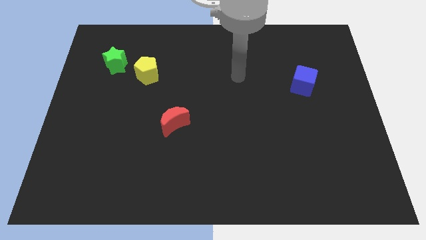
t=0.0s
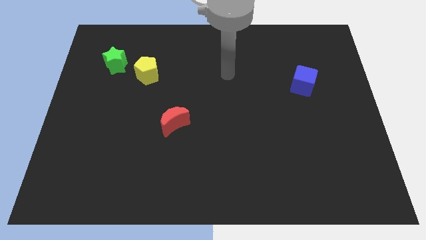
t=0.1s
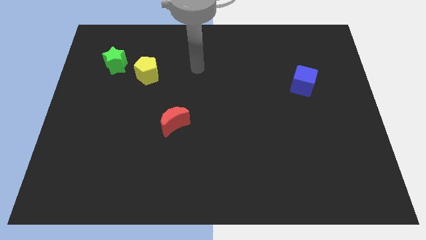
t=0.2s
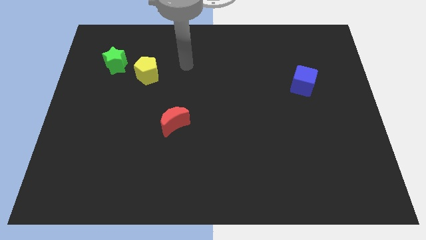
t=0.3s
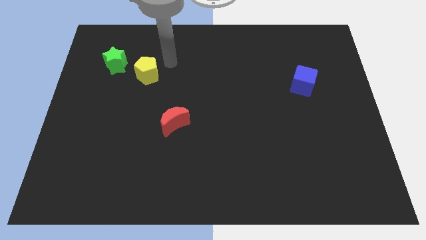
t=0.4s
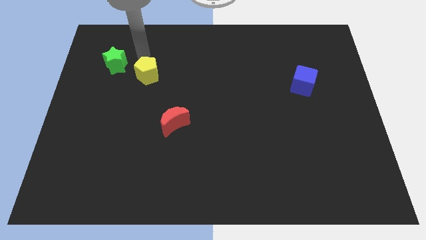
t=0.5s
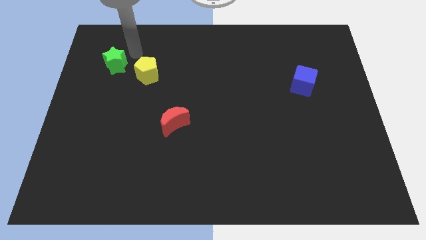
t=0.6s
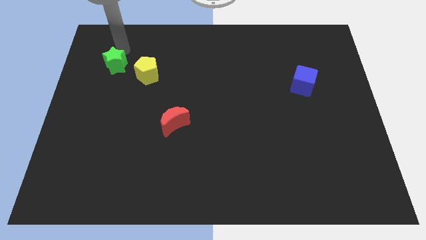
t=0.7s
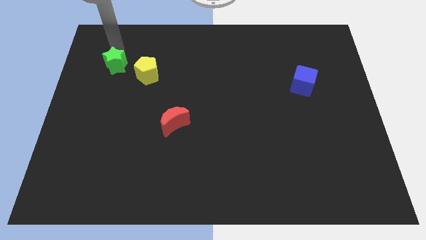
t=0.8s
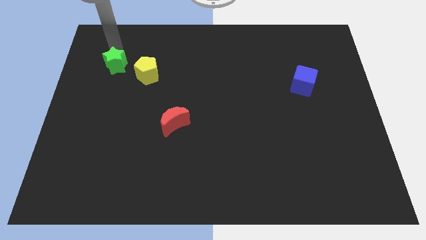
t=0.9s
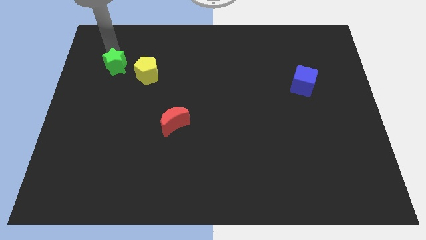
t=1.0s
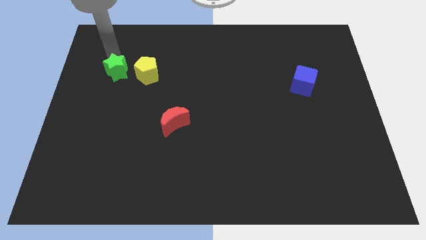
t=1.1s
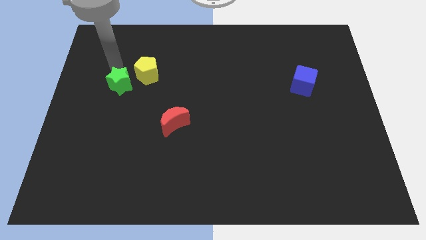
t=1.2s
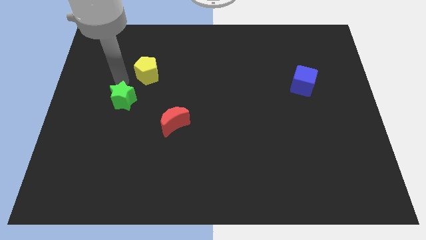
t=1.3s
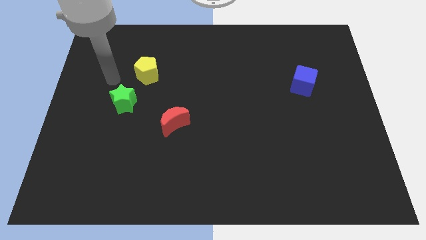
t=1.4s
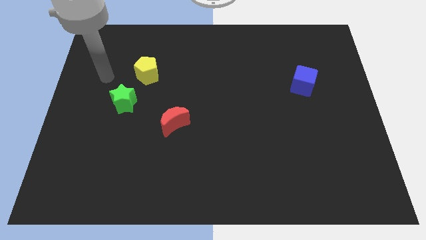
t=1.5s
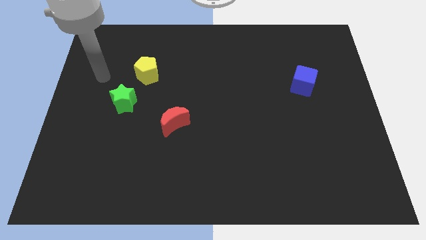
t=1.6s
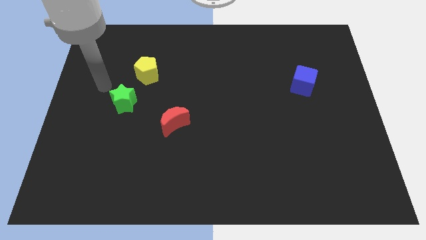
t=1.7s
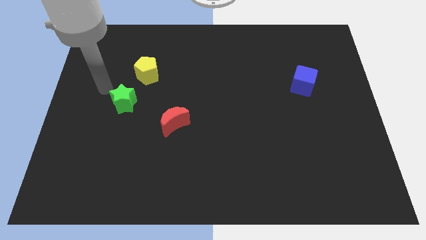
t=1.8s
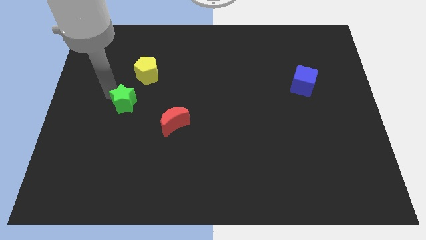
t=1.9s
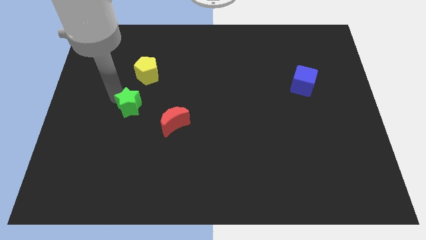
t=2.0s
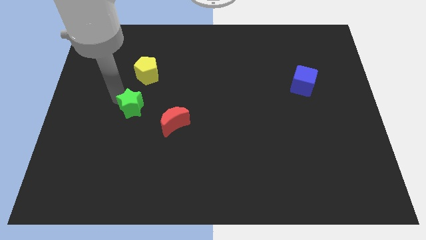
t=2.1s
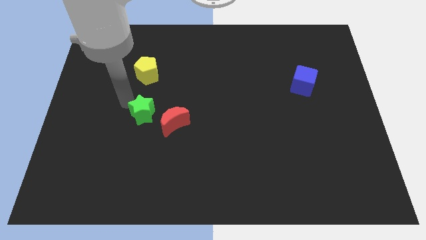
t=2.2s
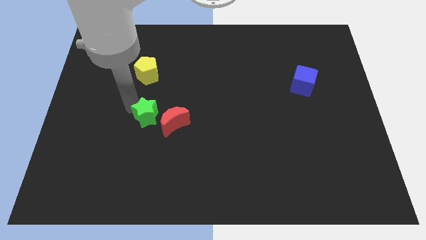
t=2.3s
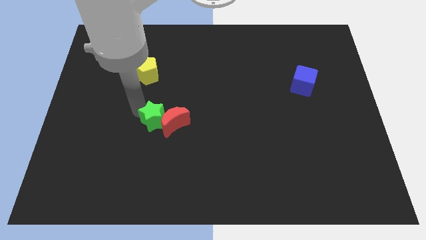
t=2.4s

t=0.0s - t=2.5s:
push the green block next to the red moon

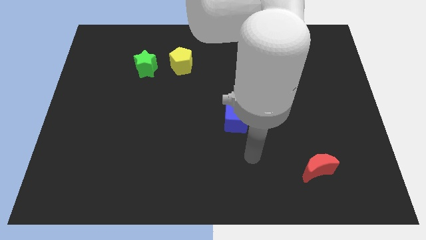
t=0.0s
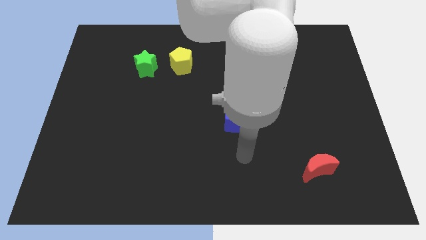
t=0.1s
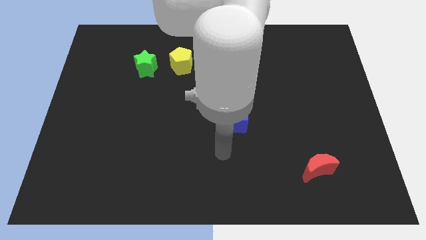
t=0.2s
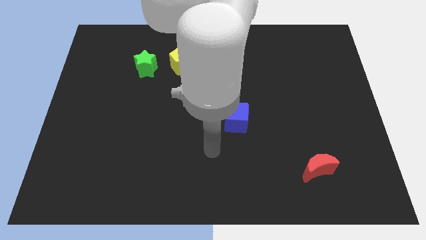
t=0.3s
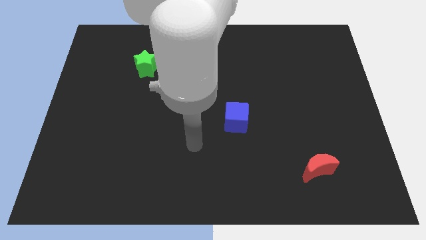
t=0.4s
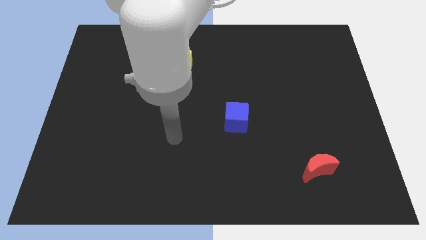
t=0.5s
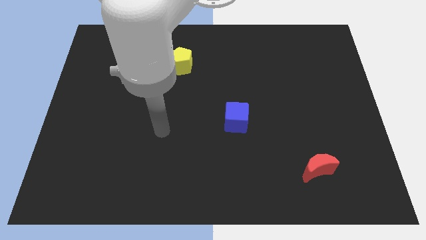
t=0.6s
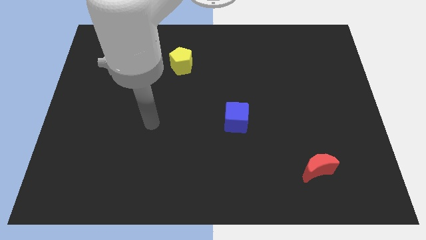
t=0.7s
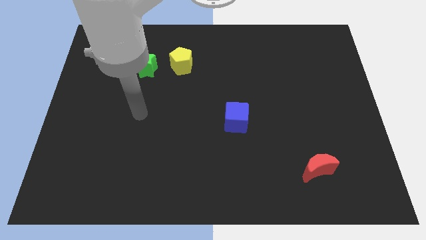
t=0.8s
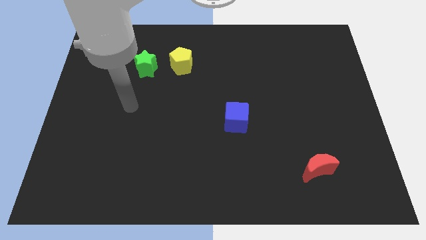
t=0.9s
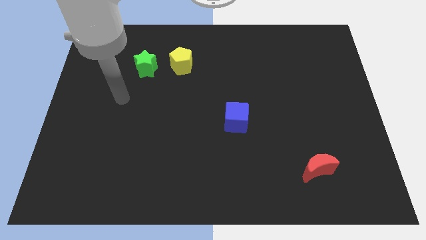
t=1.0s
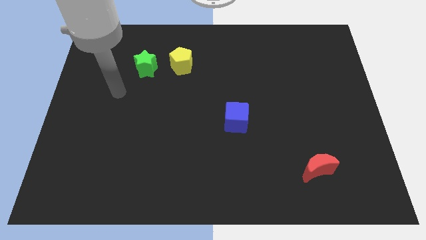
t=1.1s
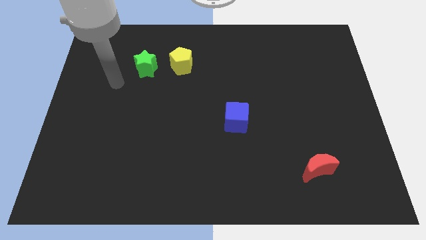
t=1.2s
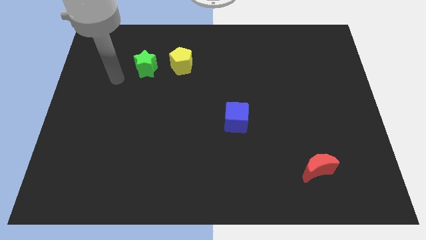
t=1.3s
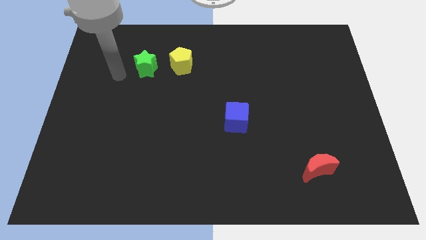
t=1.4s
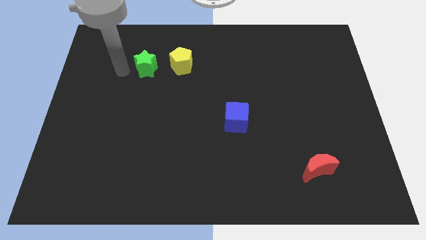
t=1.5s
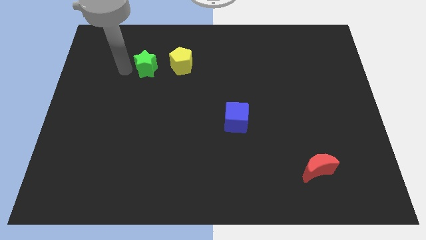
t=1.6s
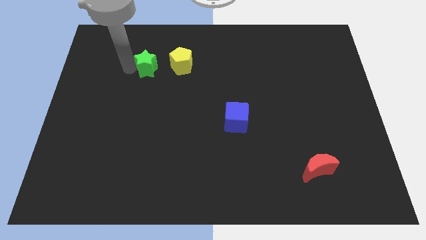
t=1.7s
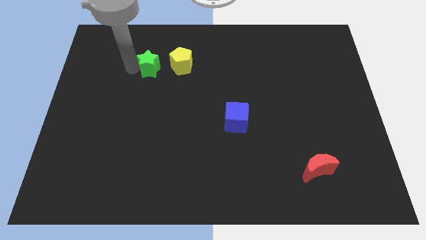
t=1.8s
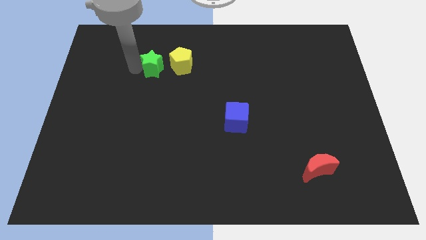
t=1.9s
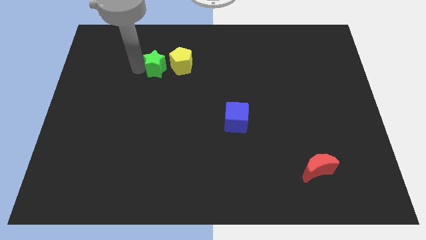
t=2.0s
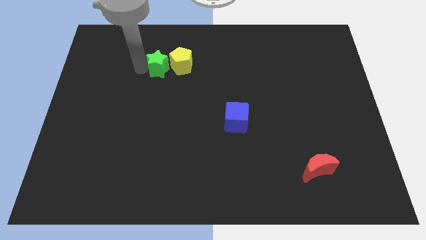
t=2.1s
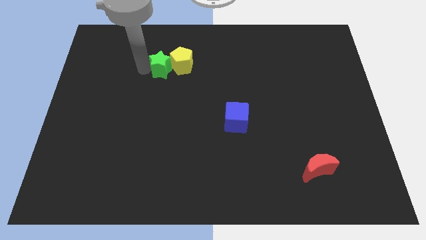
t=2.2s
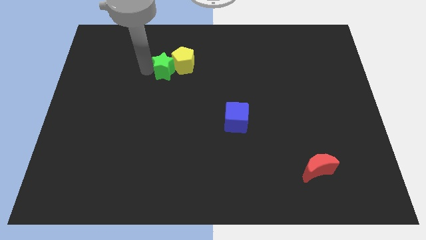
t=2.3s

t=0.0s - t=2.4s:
put the star towards the yellow pentagon

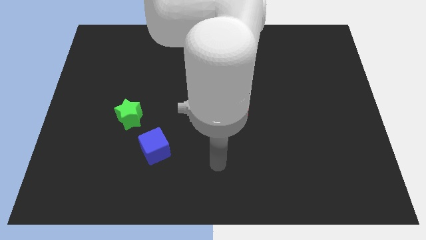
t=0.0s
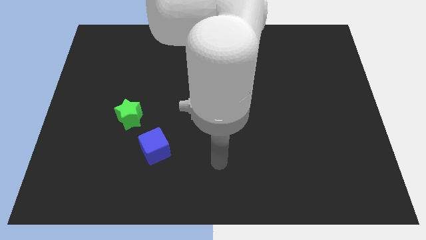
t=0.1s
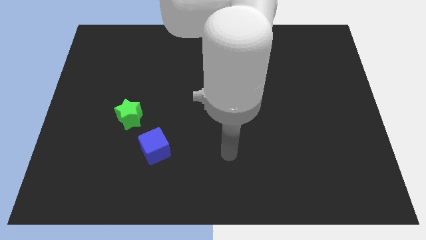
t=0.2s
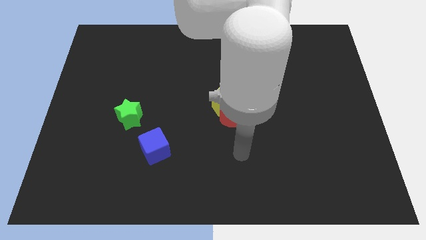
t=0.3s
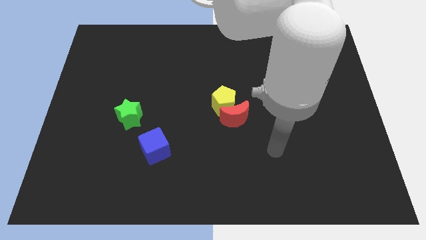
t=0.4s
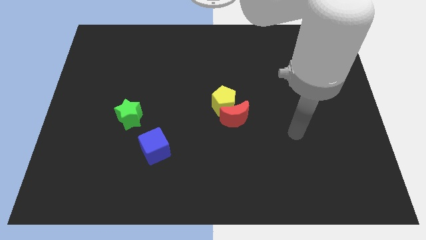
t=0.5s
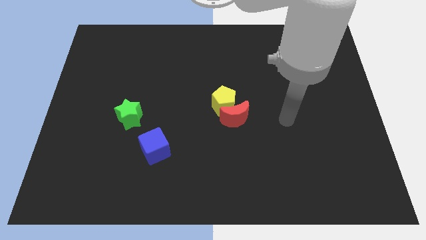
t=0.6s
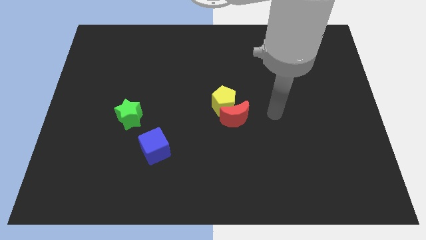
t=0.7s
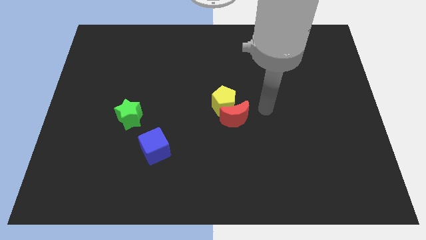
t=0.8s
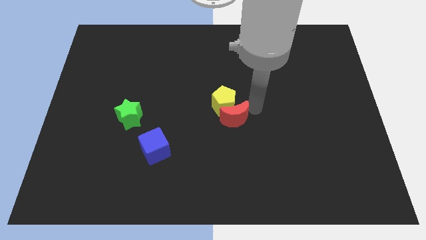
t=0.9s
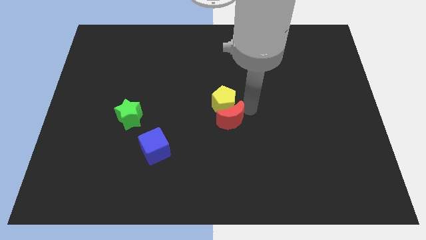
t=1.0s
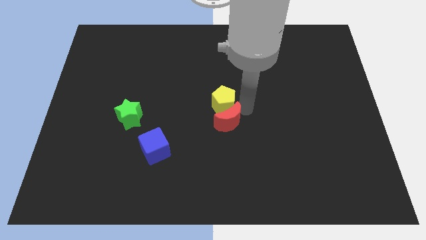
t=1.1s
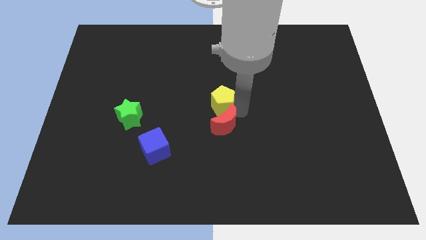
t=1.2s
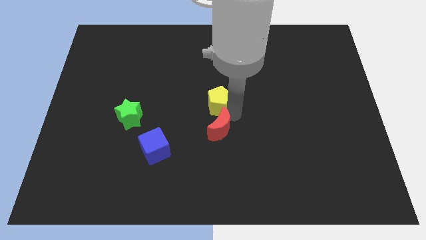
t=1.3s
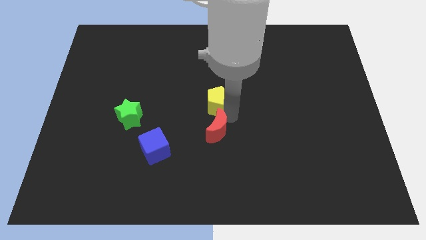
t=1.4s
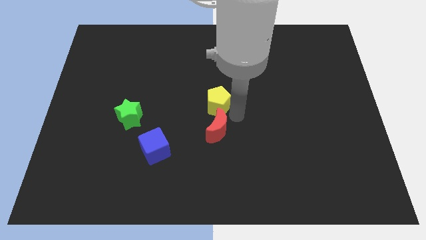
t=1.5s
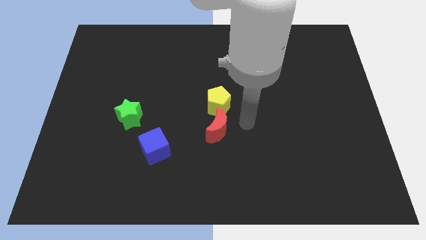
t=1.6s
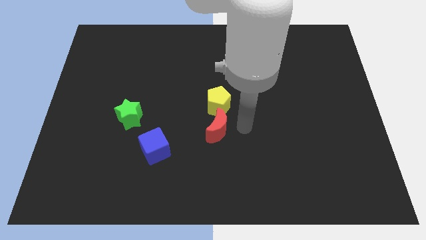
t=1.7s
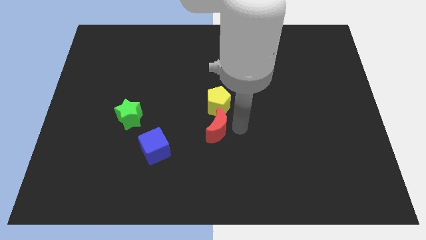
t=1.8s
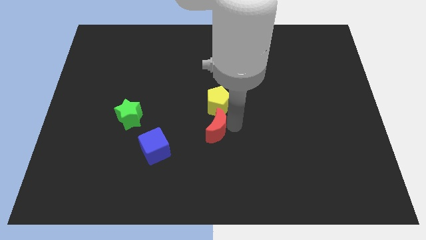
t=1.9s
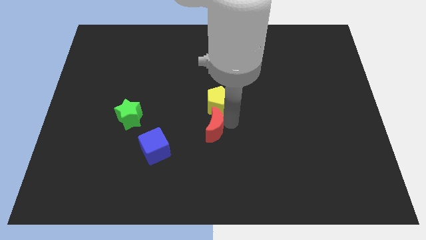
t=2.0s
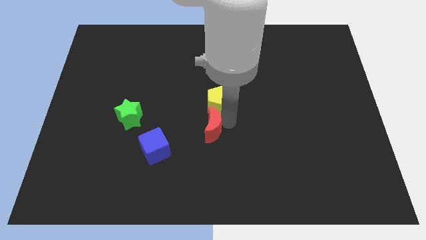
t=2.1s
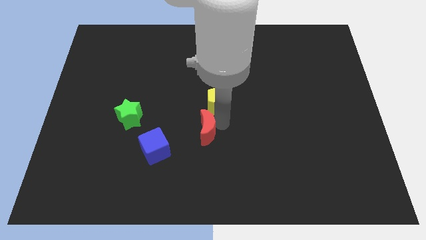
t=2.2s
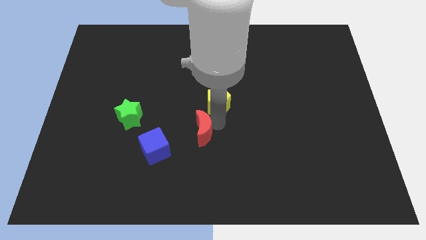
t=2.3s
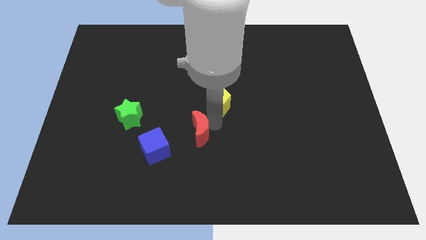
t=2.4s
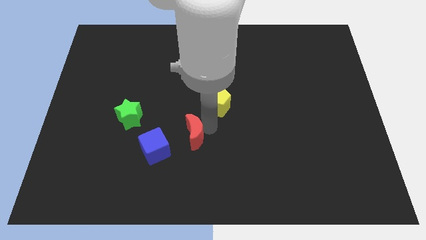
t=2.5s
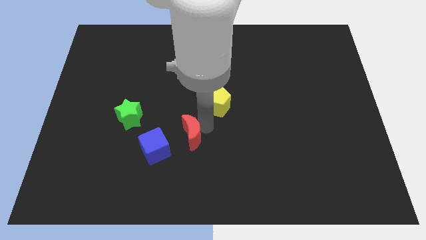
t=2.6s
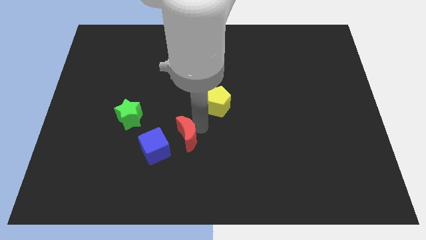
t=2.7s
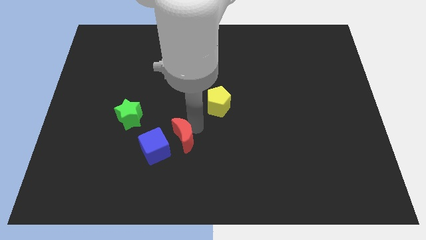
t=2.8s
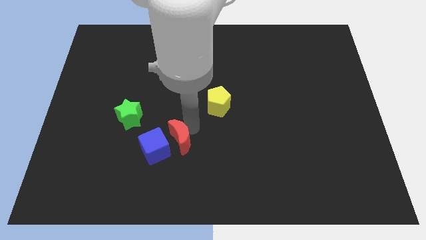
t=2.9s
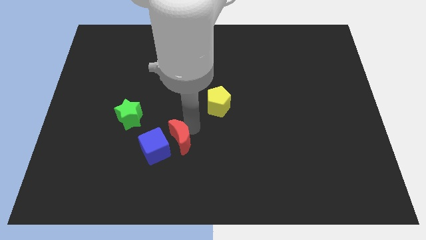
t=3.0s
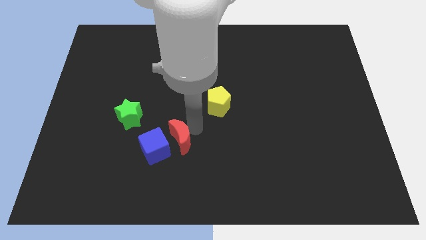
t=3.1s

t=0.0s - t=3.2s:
push the red block towards the blue block

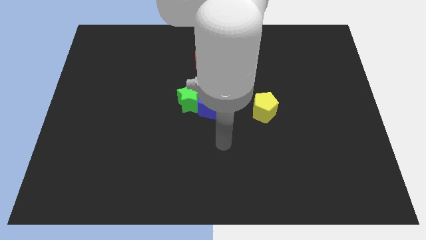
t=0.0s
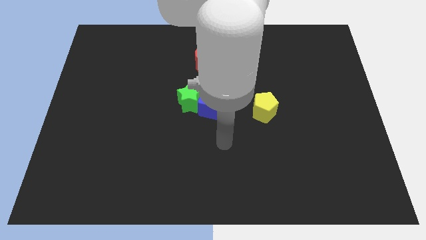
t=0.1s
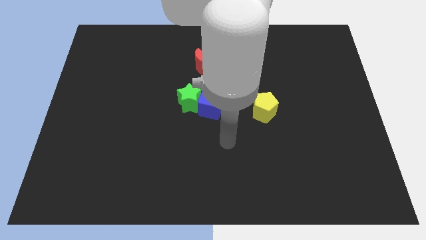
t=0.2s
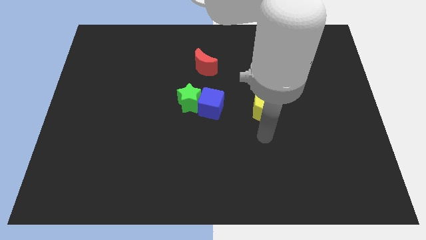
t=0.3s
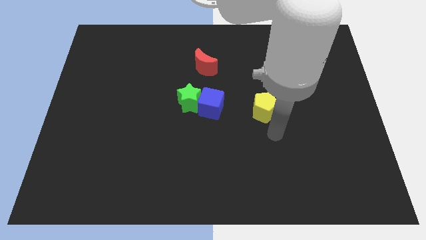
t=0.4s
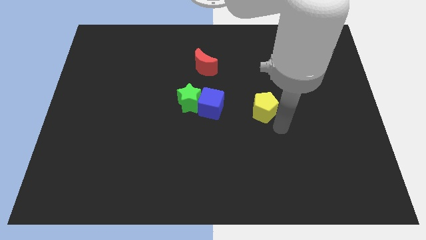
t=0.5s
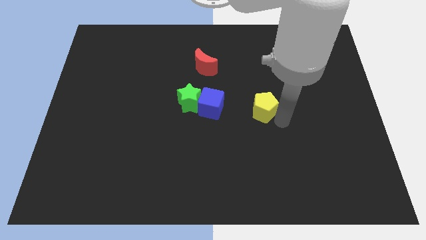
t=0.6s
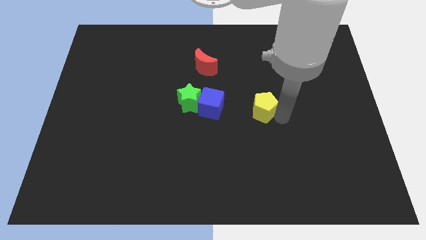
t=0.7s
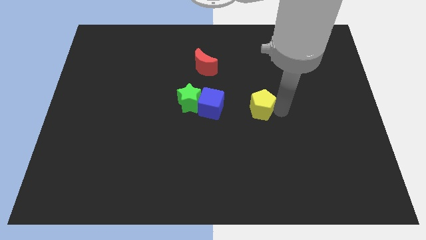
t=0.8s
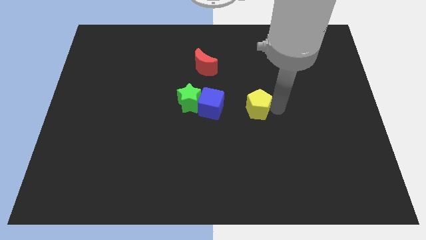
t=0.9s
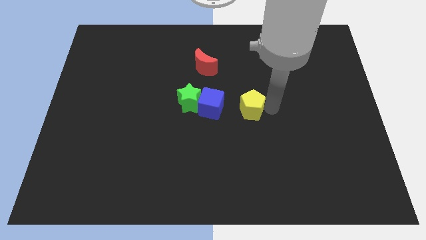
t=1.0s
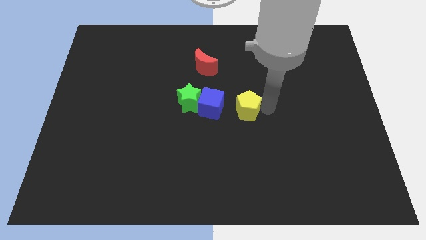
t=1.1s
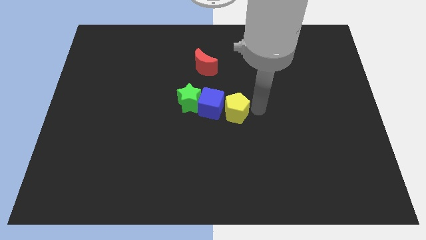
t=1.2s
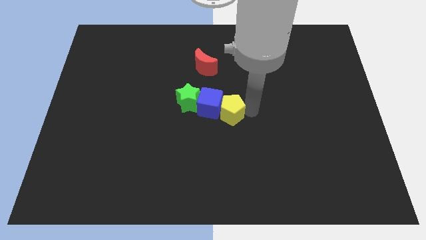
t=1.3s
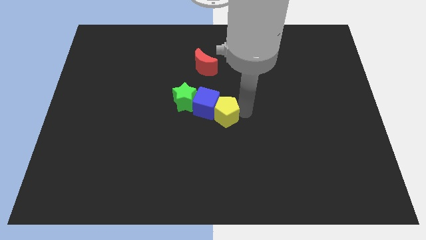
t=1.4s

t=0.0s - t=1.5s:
put the yellow pentagon close to the blue cube
